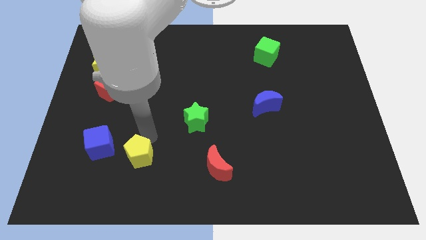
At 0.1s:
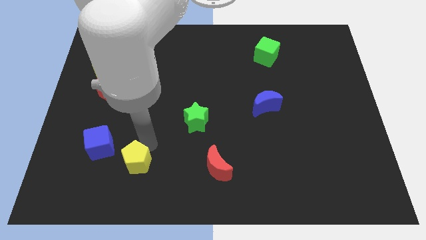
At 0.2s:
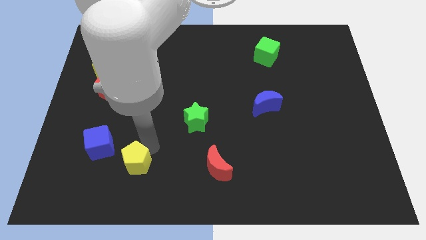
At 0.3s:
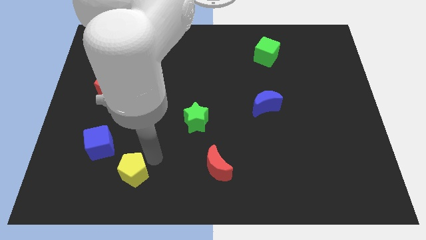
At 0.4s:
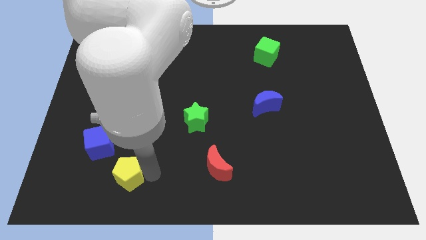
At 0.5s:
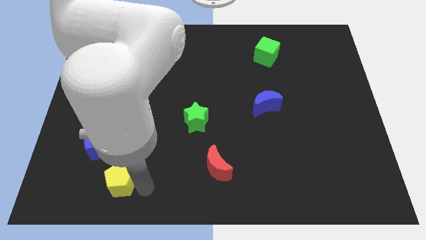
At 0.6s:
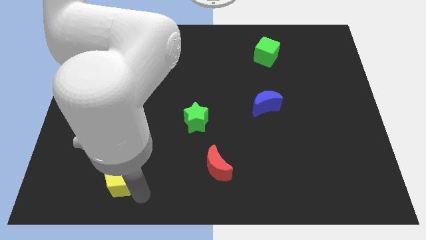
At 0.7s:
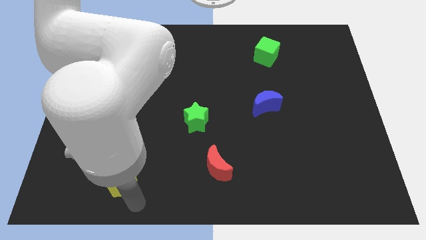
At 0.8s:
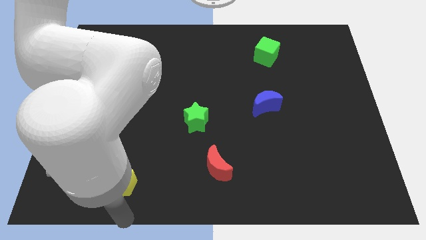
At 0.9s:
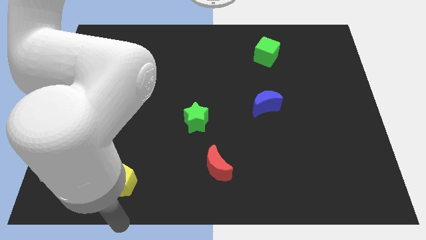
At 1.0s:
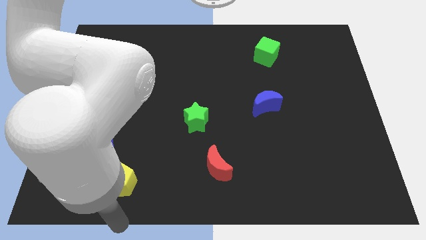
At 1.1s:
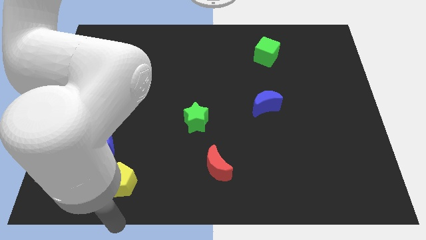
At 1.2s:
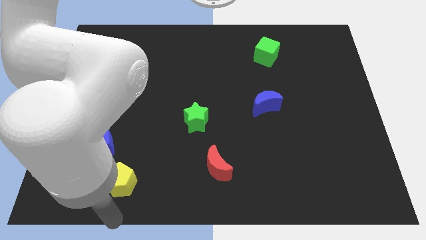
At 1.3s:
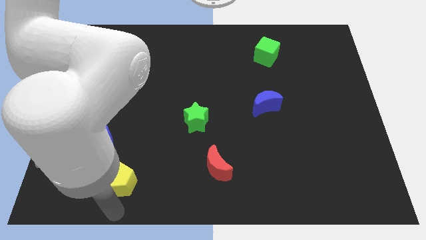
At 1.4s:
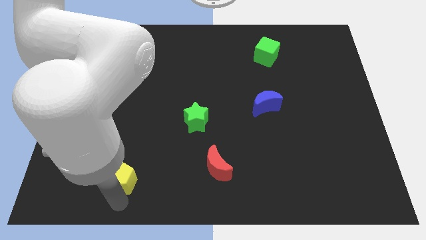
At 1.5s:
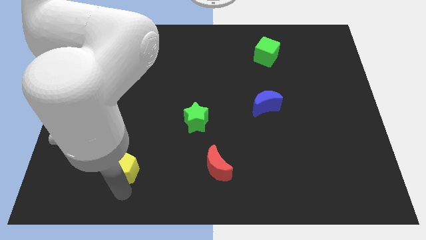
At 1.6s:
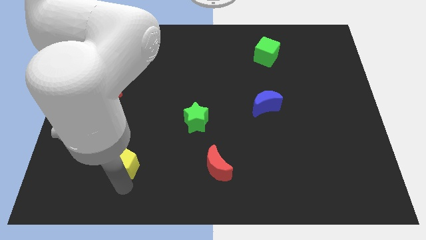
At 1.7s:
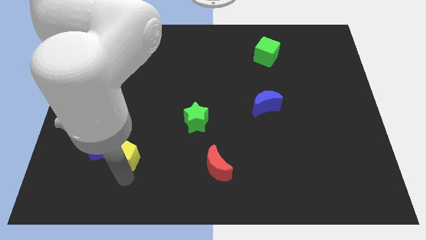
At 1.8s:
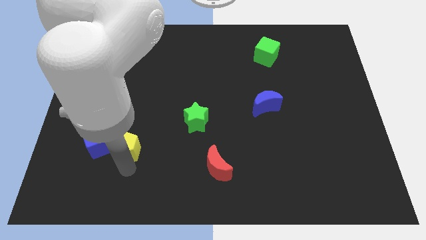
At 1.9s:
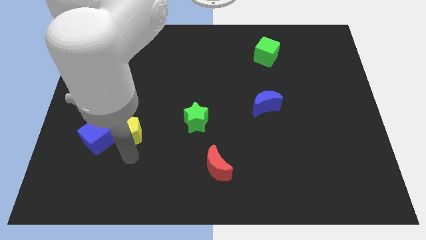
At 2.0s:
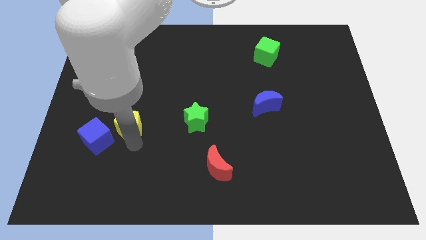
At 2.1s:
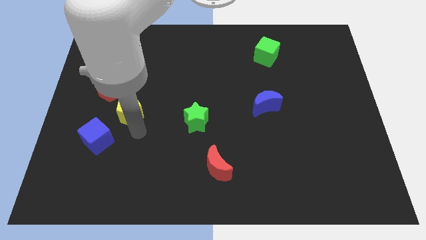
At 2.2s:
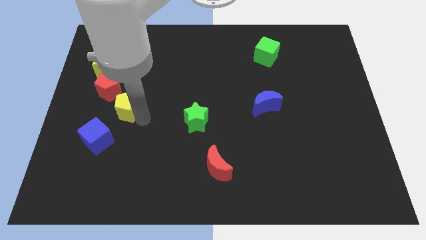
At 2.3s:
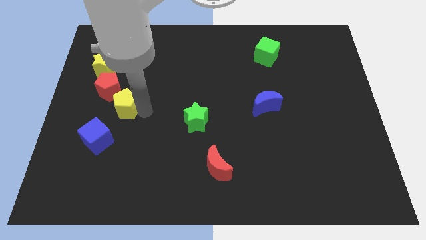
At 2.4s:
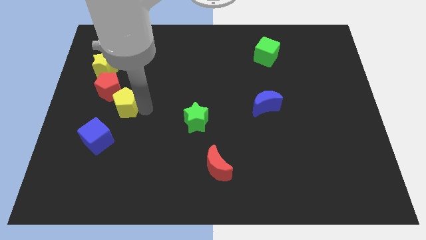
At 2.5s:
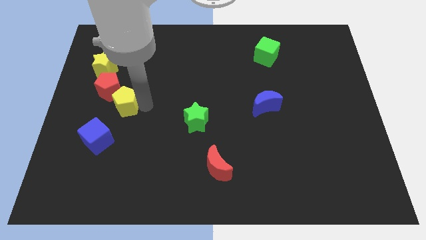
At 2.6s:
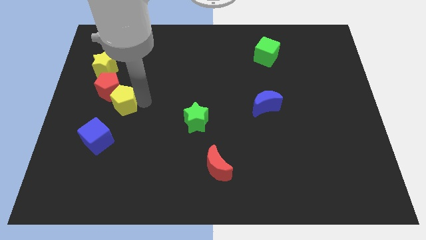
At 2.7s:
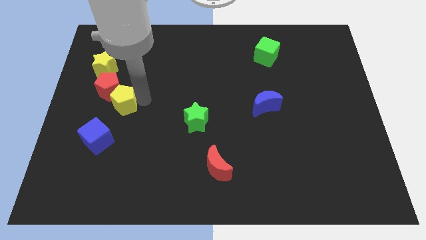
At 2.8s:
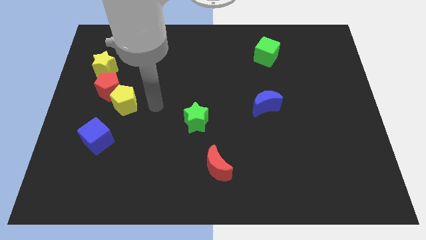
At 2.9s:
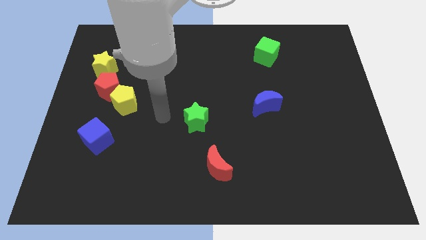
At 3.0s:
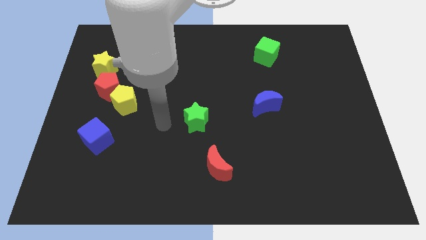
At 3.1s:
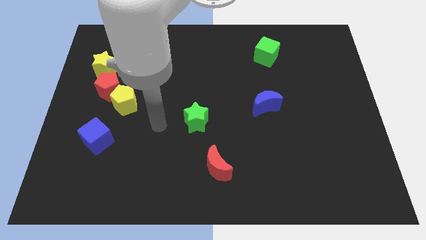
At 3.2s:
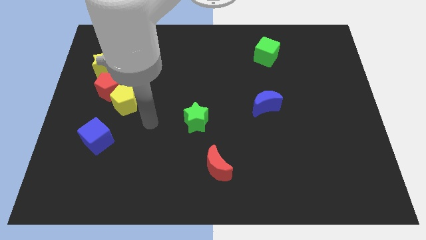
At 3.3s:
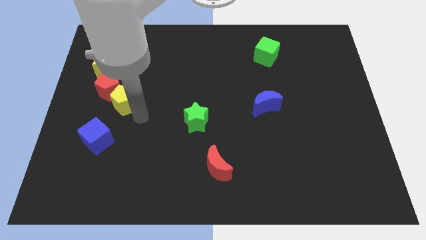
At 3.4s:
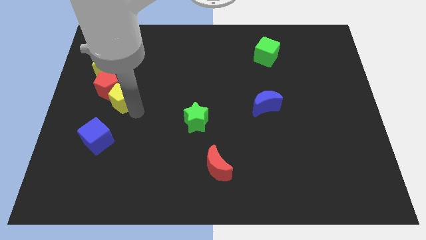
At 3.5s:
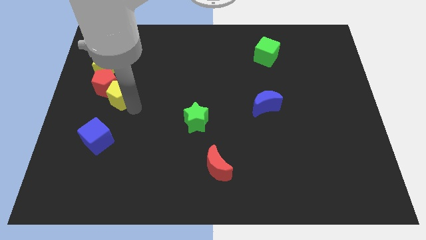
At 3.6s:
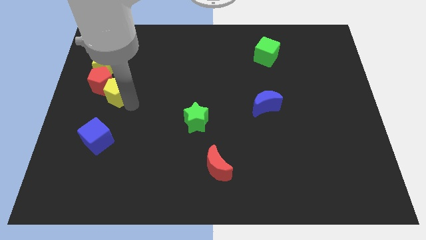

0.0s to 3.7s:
place the yellow pentagon below the red pentgaon

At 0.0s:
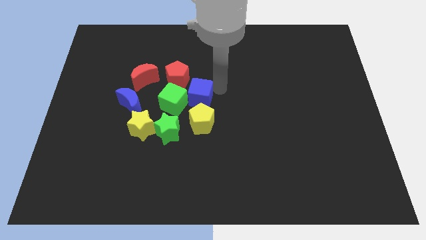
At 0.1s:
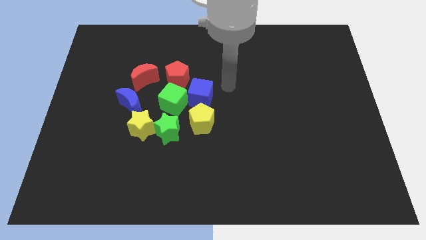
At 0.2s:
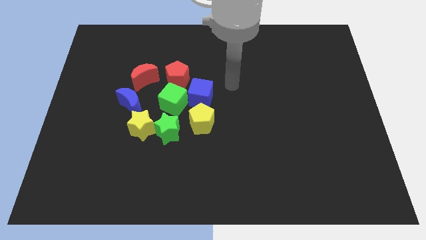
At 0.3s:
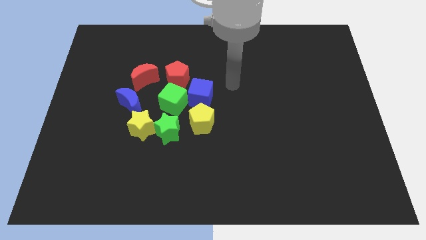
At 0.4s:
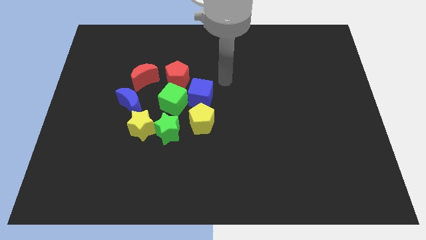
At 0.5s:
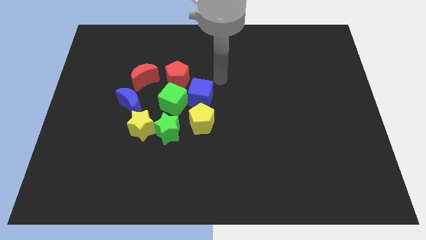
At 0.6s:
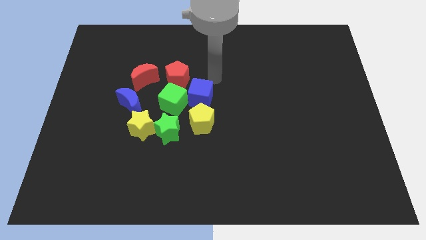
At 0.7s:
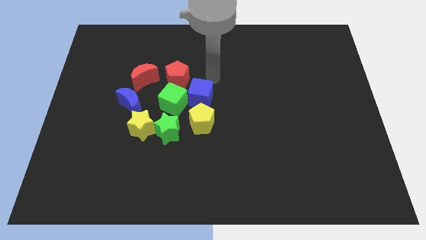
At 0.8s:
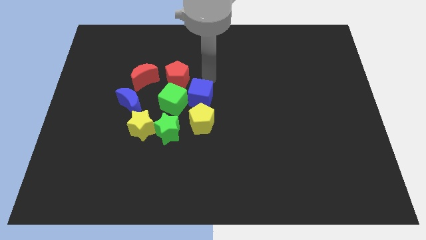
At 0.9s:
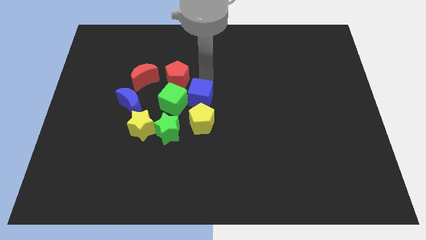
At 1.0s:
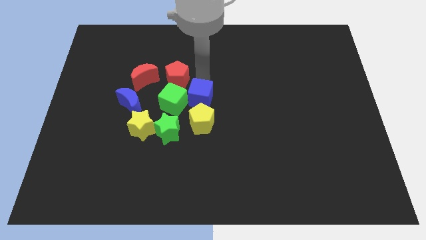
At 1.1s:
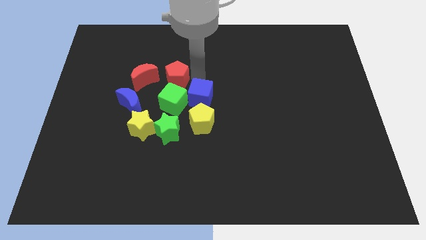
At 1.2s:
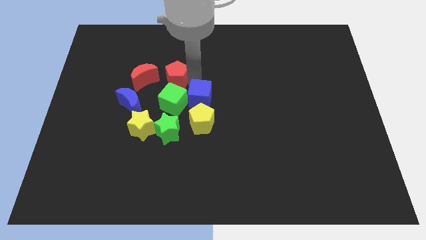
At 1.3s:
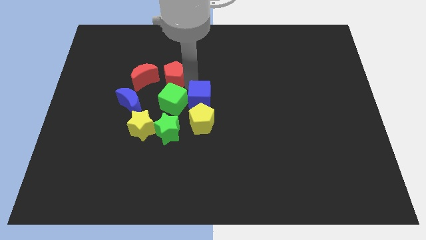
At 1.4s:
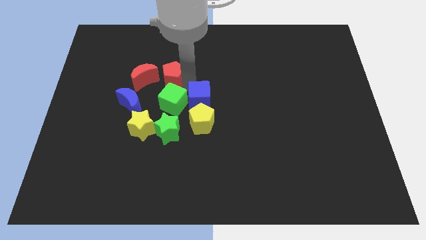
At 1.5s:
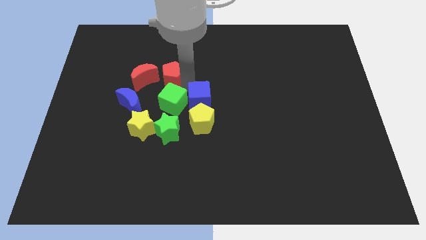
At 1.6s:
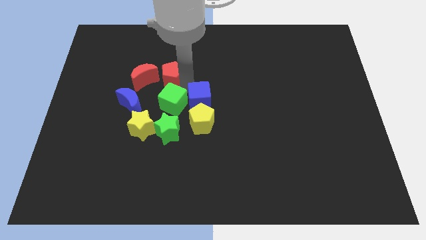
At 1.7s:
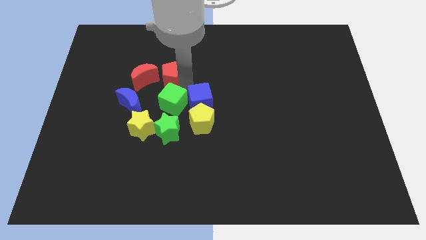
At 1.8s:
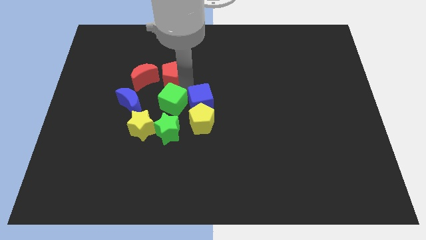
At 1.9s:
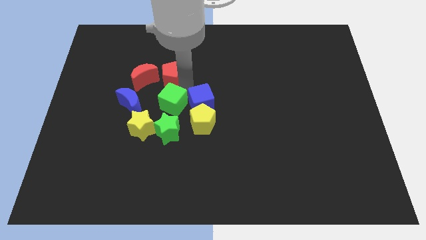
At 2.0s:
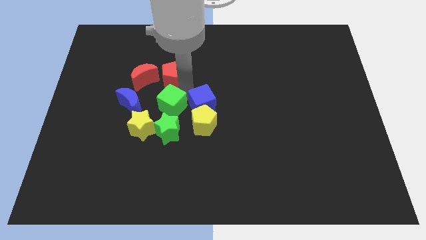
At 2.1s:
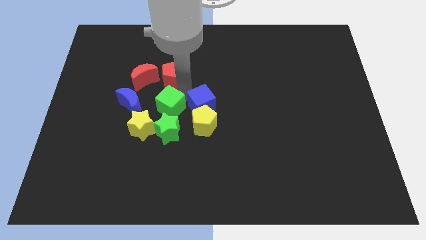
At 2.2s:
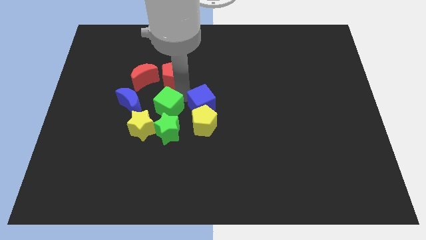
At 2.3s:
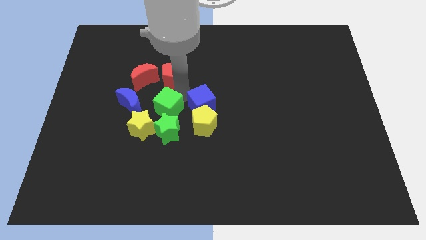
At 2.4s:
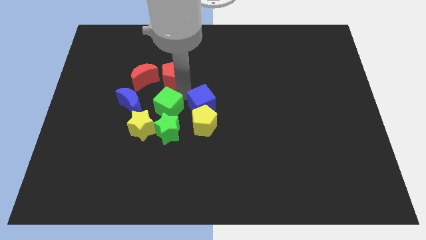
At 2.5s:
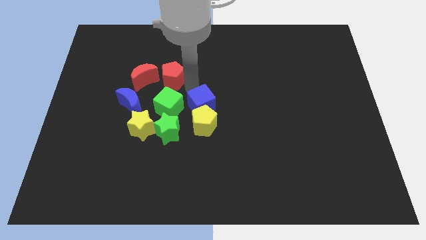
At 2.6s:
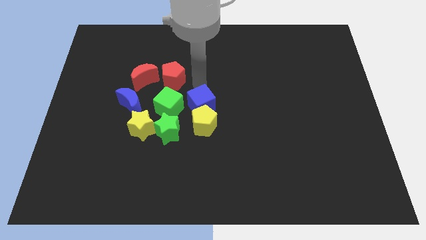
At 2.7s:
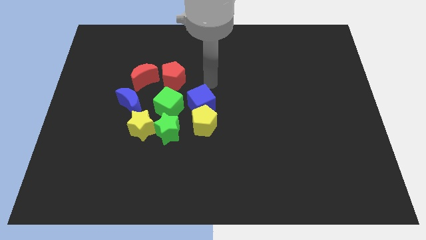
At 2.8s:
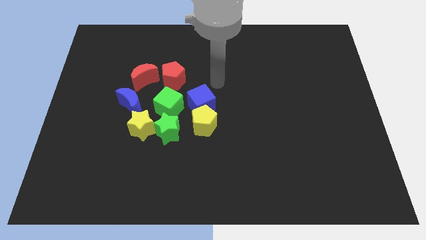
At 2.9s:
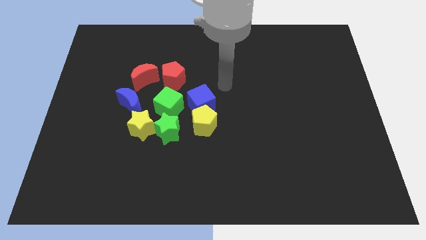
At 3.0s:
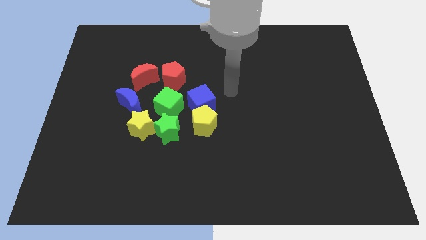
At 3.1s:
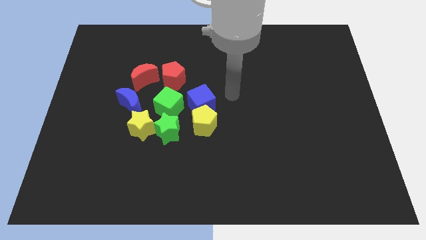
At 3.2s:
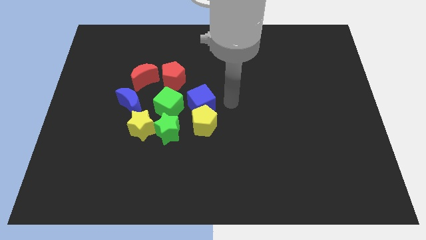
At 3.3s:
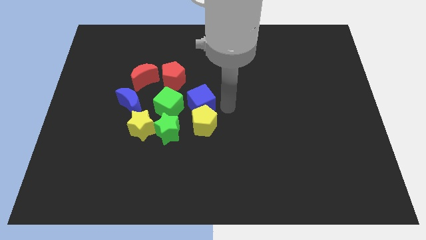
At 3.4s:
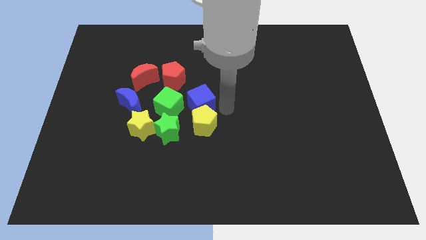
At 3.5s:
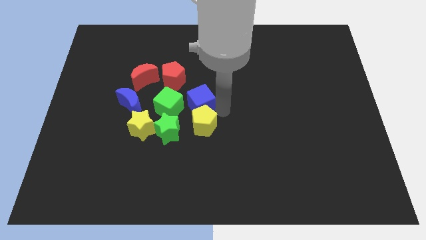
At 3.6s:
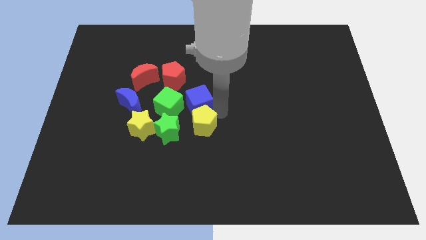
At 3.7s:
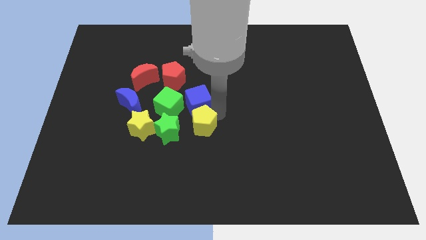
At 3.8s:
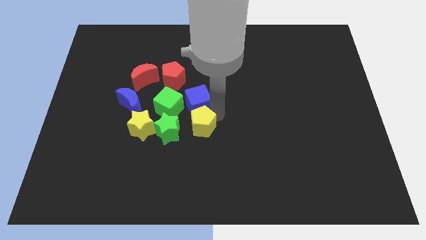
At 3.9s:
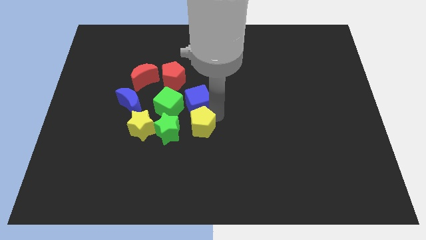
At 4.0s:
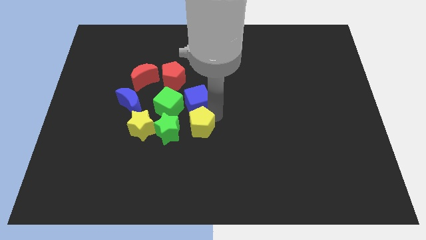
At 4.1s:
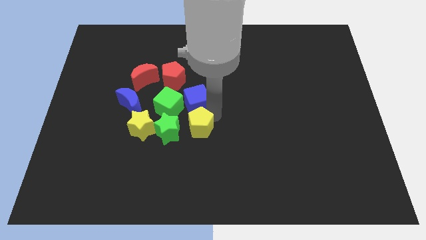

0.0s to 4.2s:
push the yellow pentagon green and blue cubes towards the left side of the board

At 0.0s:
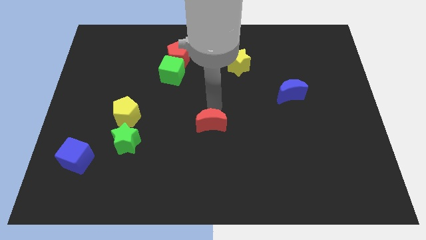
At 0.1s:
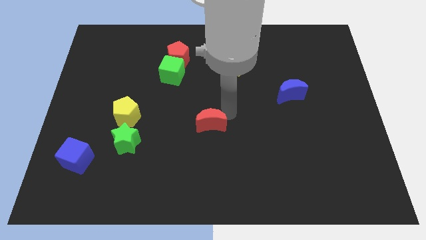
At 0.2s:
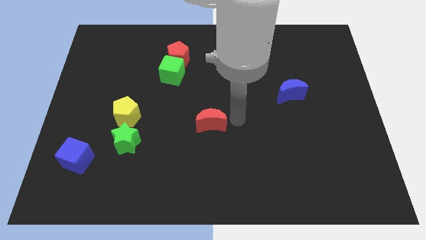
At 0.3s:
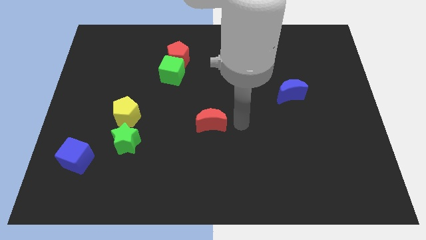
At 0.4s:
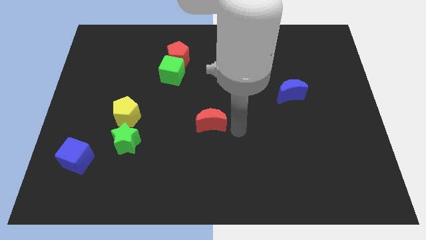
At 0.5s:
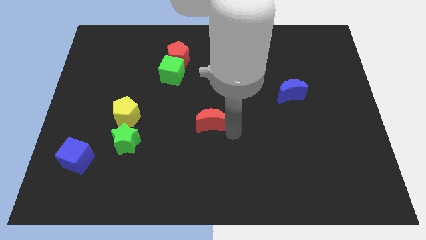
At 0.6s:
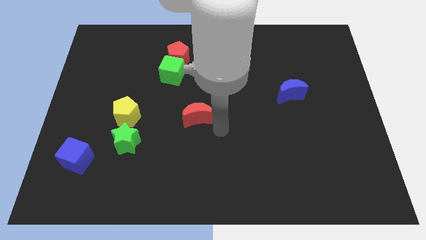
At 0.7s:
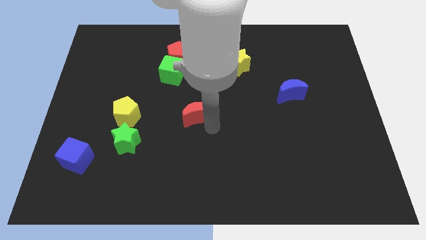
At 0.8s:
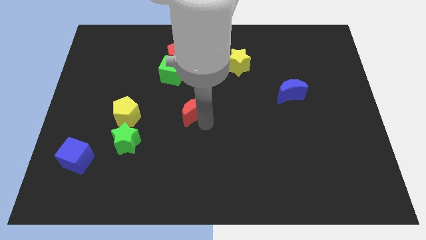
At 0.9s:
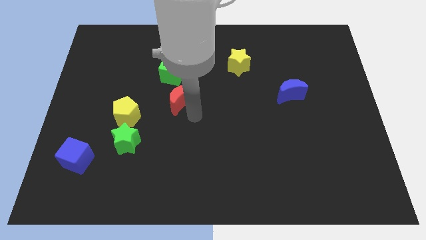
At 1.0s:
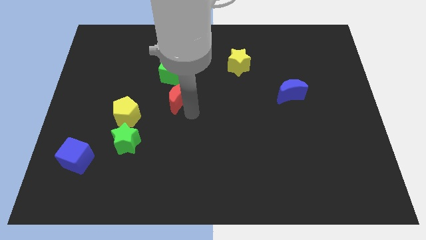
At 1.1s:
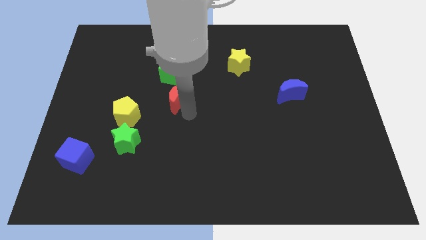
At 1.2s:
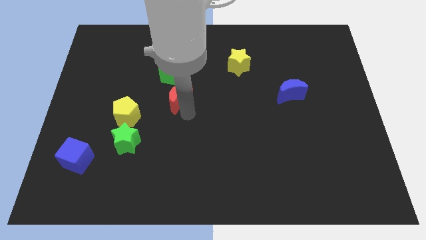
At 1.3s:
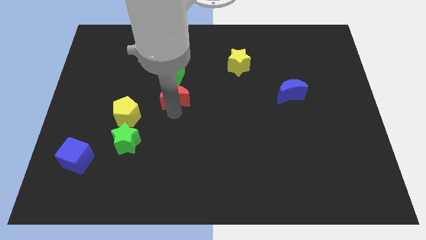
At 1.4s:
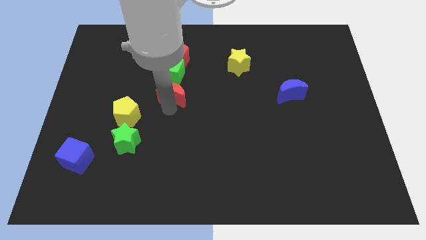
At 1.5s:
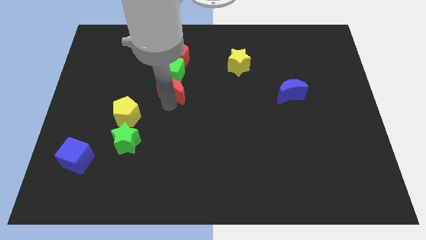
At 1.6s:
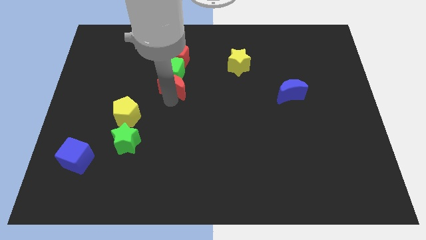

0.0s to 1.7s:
place the red moon below the green cube
